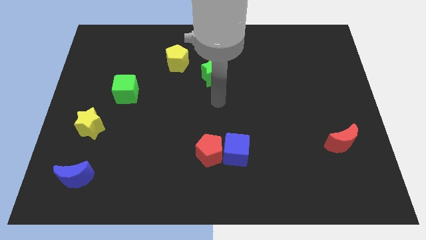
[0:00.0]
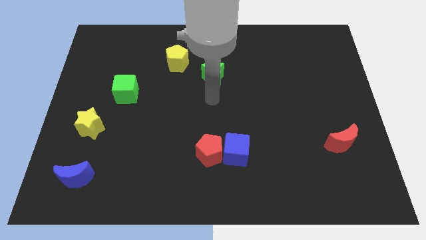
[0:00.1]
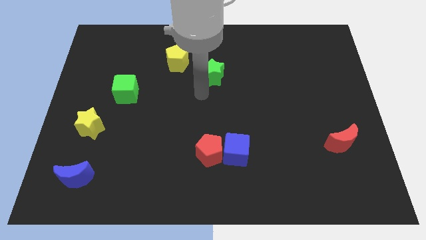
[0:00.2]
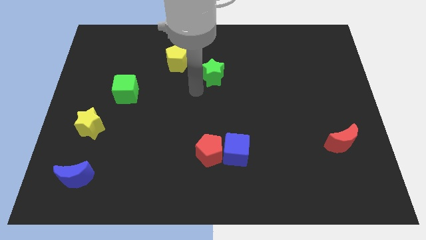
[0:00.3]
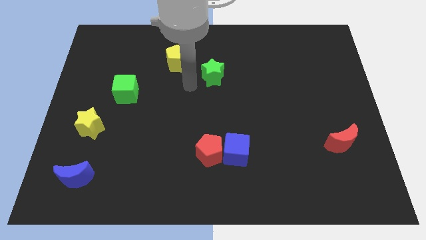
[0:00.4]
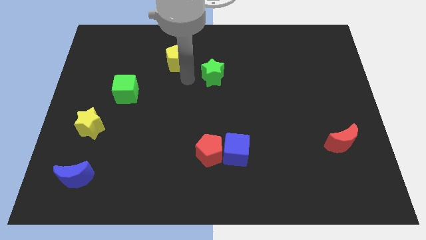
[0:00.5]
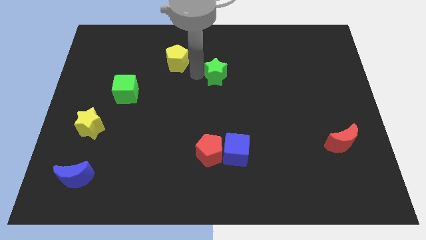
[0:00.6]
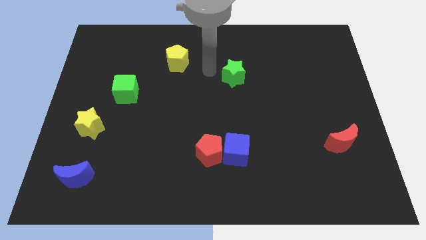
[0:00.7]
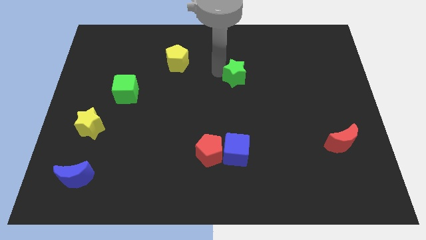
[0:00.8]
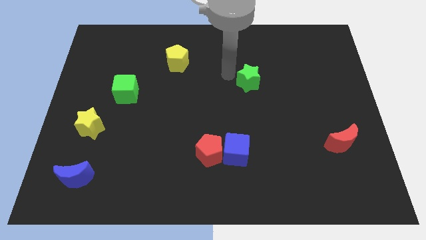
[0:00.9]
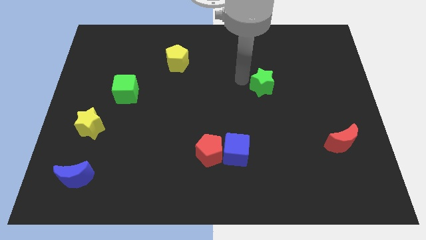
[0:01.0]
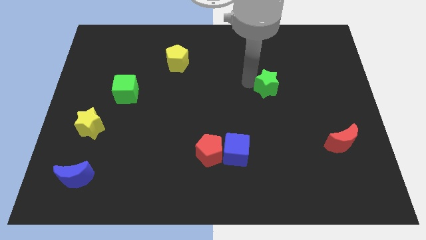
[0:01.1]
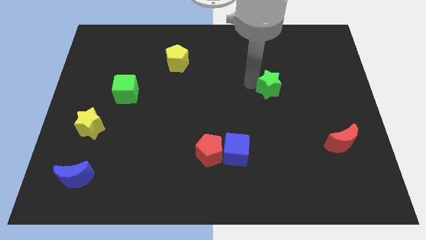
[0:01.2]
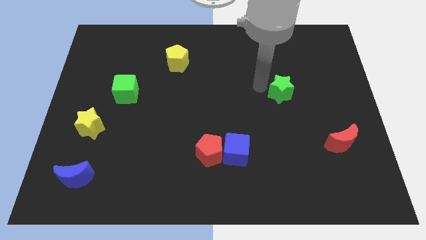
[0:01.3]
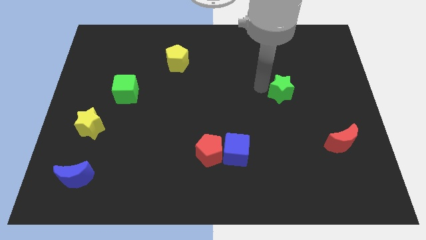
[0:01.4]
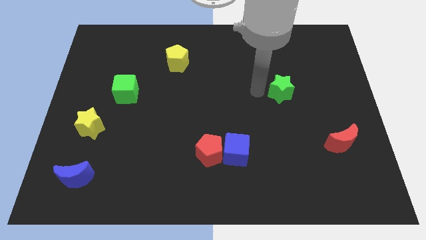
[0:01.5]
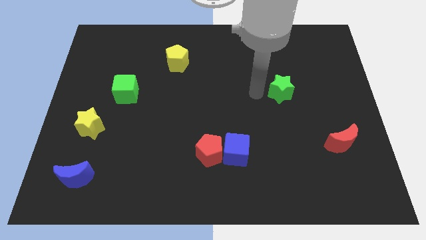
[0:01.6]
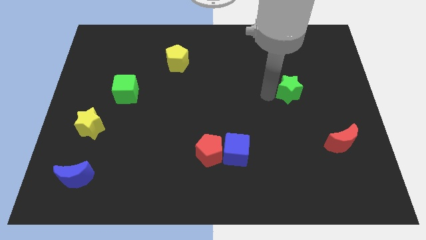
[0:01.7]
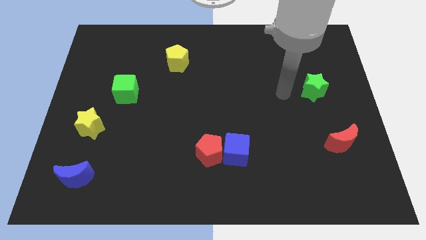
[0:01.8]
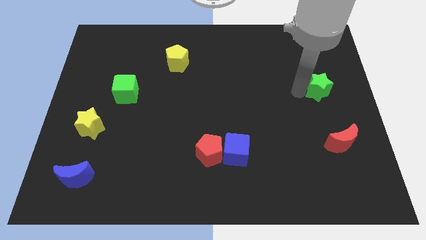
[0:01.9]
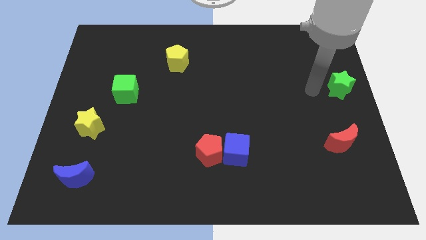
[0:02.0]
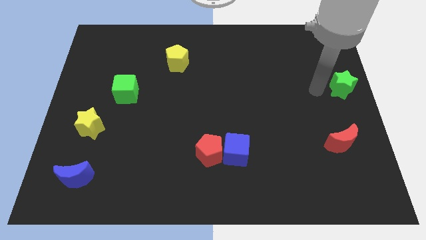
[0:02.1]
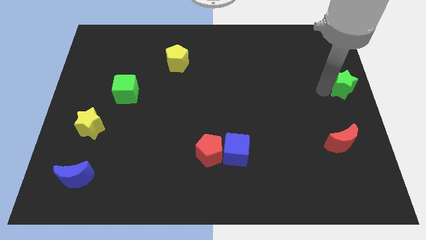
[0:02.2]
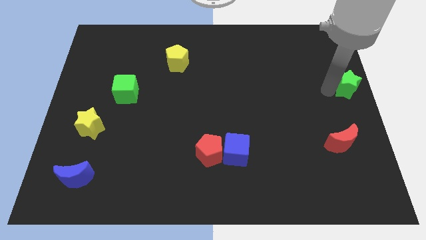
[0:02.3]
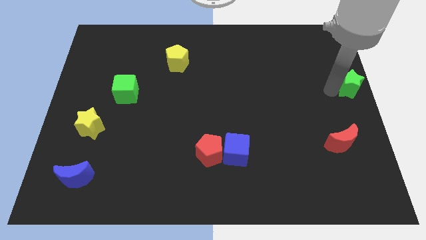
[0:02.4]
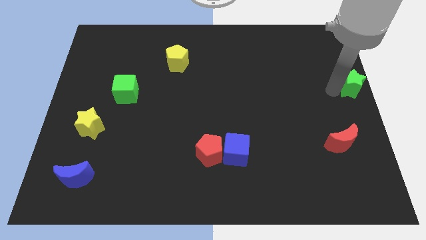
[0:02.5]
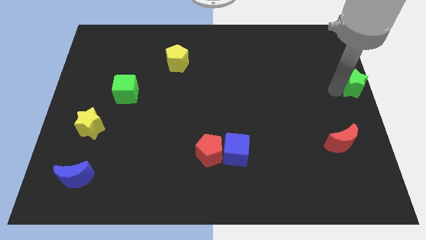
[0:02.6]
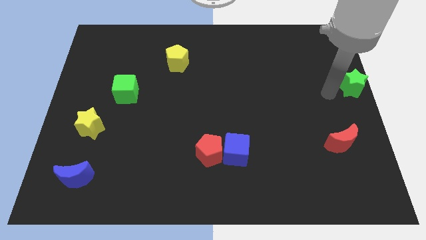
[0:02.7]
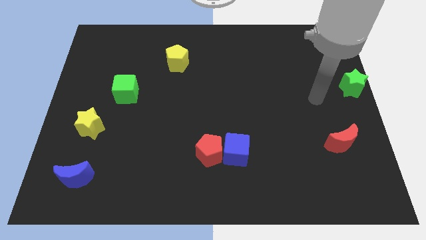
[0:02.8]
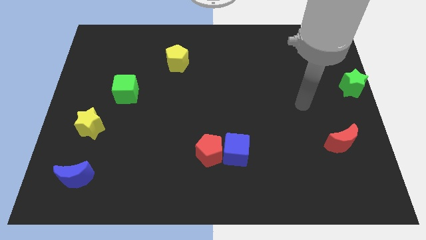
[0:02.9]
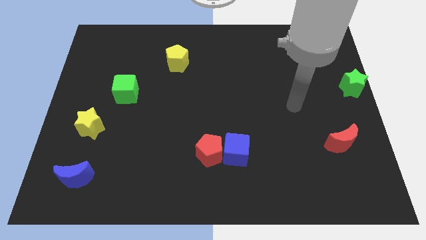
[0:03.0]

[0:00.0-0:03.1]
push the green star towards right middle center of the board

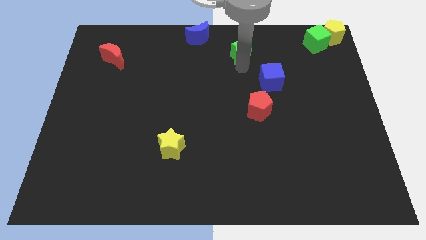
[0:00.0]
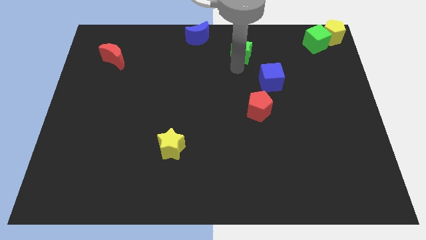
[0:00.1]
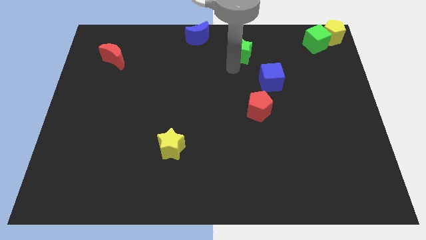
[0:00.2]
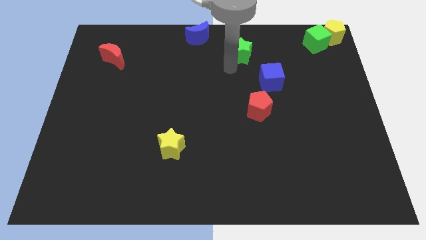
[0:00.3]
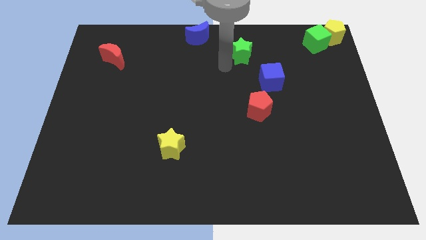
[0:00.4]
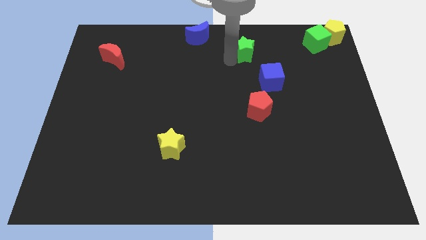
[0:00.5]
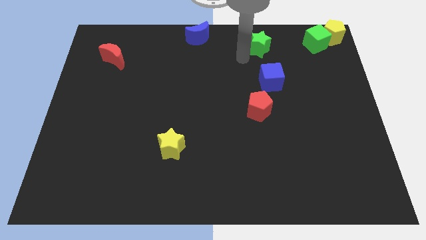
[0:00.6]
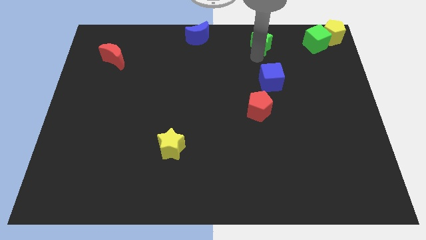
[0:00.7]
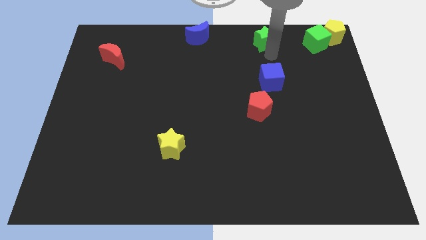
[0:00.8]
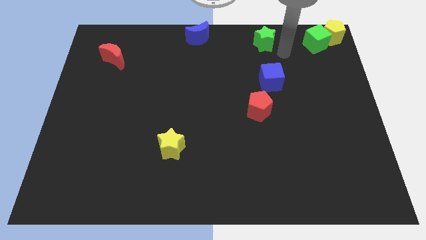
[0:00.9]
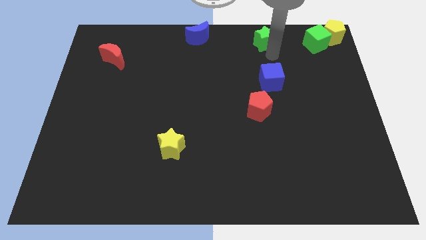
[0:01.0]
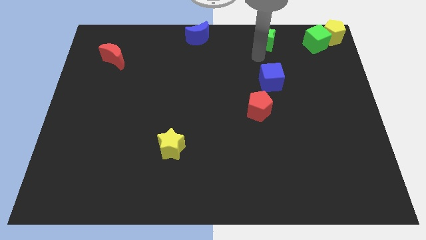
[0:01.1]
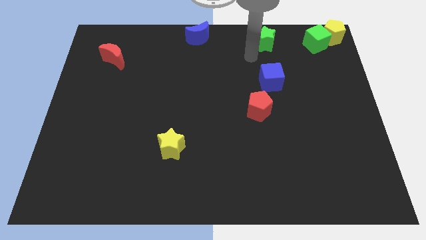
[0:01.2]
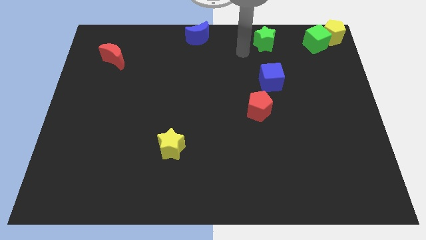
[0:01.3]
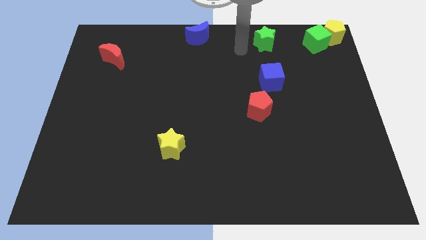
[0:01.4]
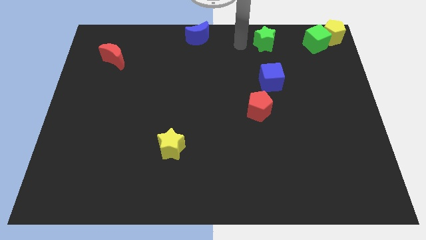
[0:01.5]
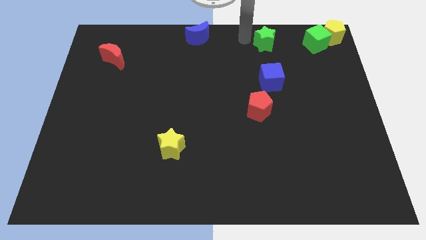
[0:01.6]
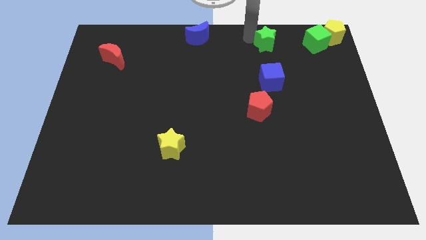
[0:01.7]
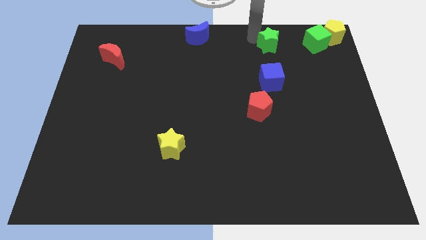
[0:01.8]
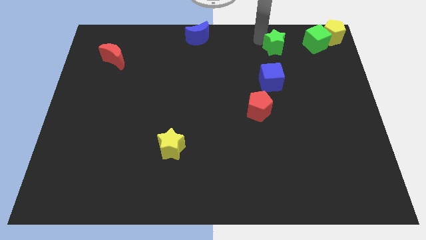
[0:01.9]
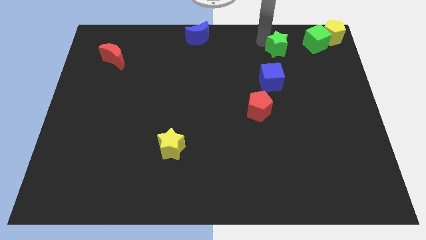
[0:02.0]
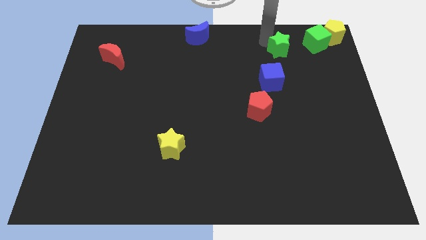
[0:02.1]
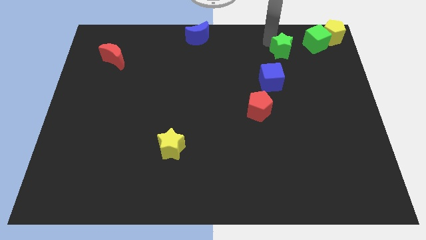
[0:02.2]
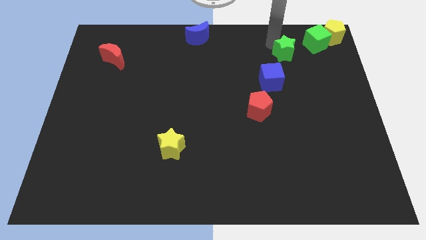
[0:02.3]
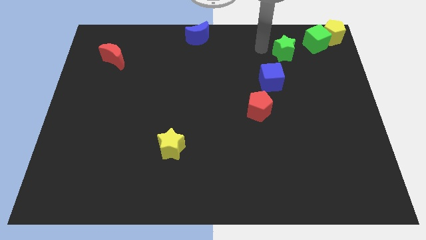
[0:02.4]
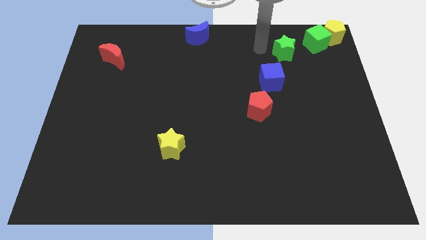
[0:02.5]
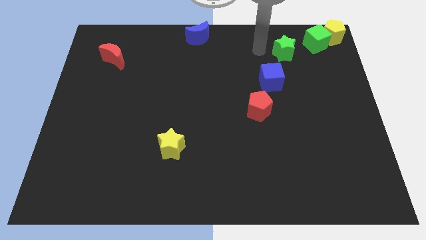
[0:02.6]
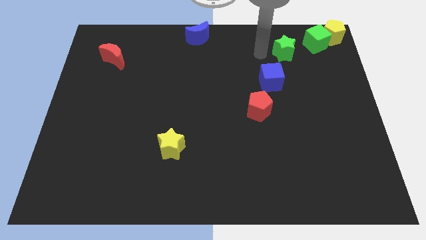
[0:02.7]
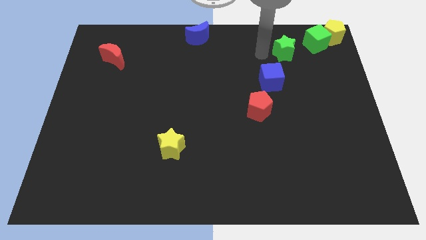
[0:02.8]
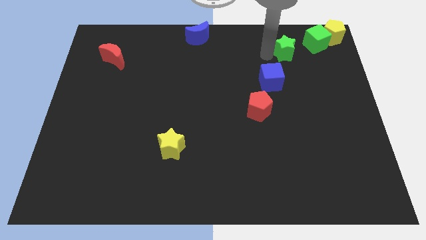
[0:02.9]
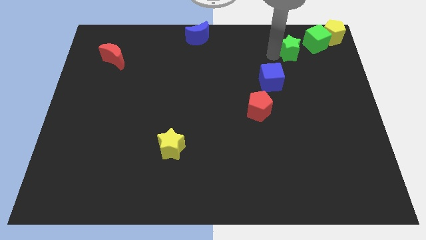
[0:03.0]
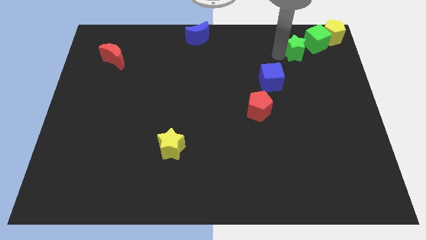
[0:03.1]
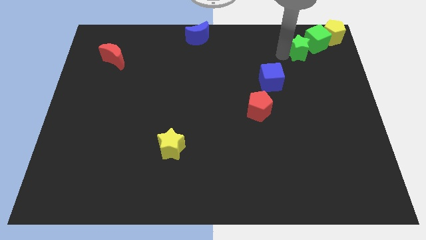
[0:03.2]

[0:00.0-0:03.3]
slide the green star close to the green cube

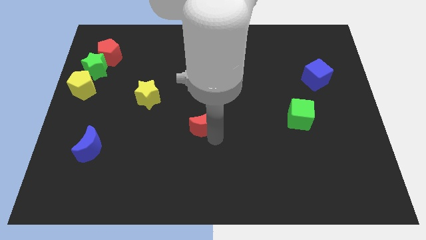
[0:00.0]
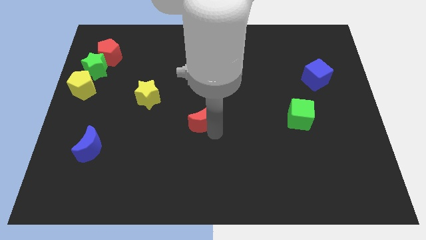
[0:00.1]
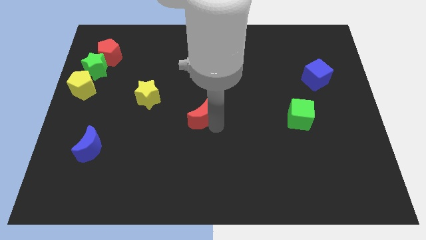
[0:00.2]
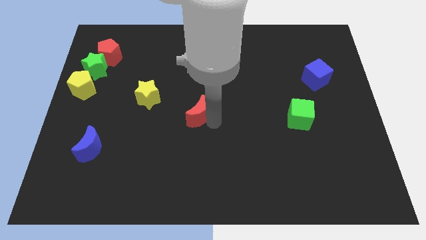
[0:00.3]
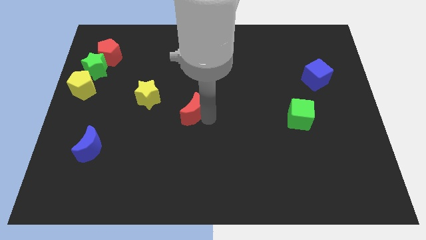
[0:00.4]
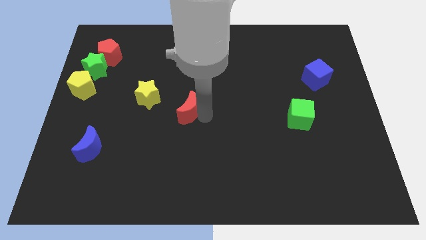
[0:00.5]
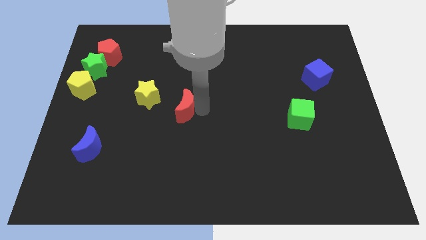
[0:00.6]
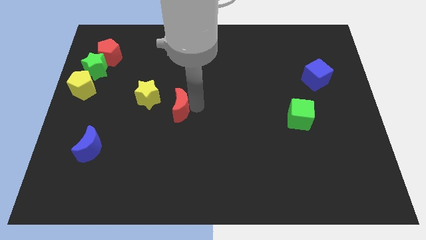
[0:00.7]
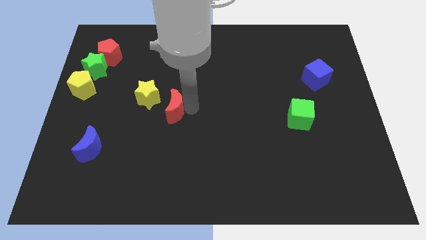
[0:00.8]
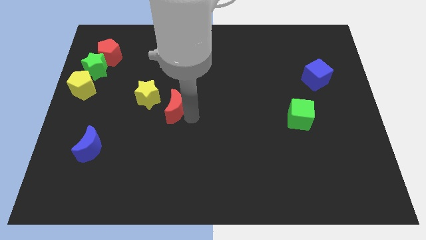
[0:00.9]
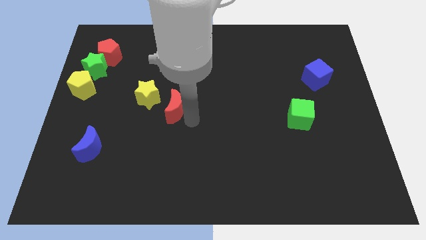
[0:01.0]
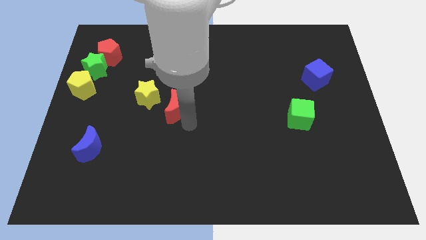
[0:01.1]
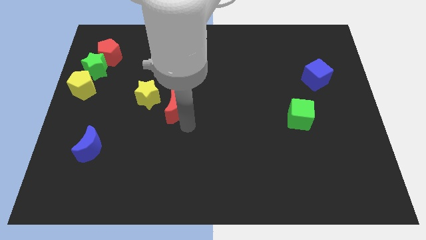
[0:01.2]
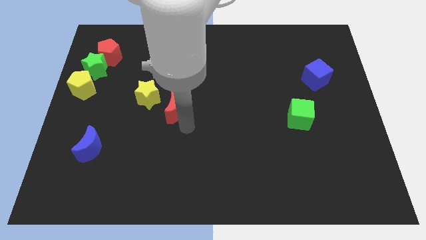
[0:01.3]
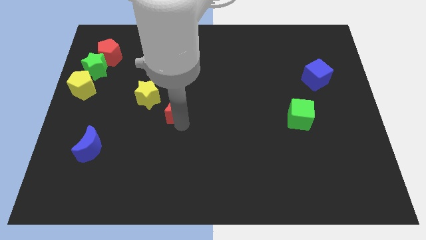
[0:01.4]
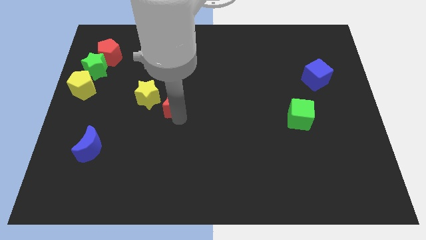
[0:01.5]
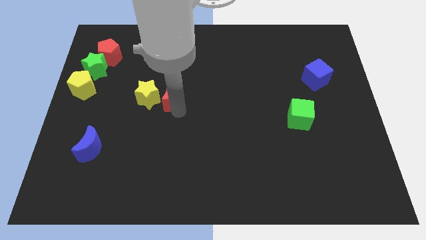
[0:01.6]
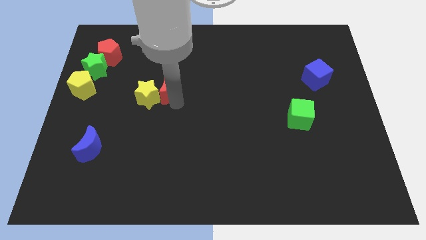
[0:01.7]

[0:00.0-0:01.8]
bring the red crescent at the right side of the yellow star

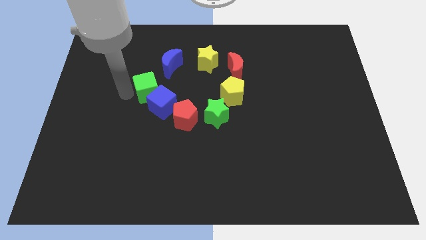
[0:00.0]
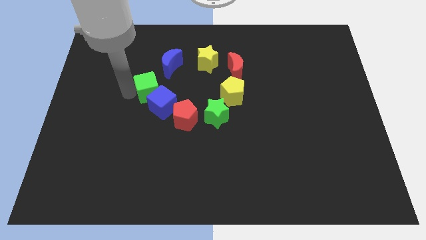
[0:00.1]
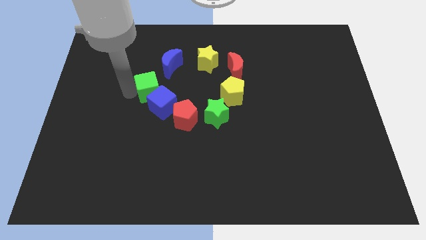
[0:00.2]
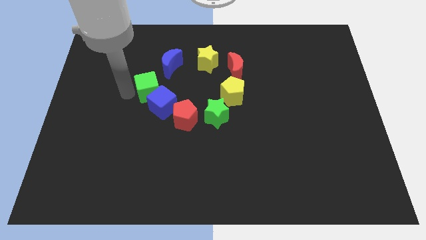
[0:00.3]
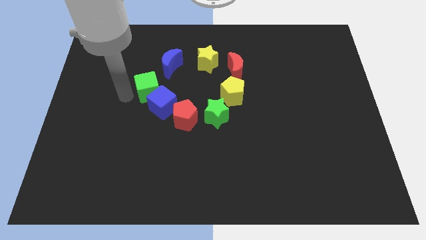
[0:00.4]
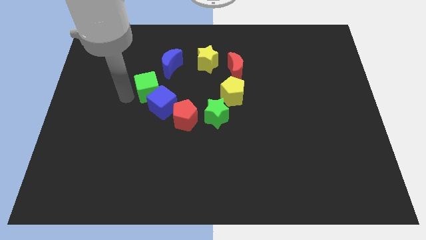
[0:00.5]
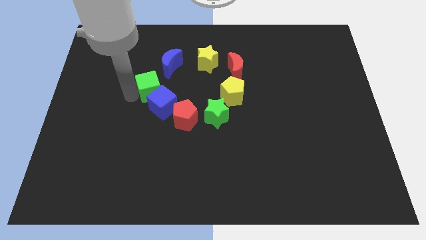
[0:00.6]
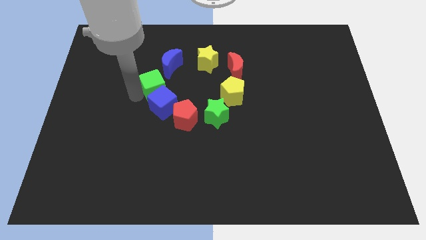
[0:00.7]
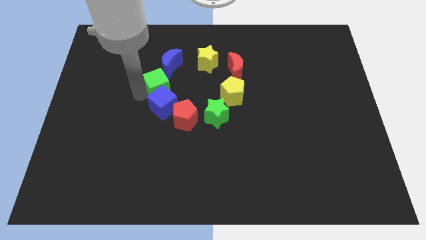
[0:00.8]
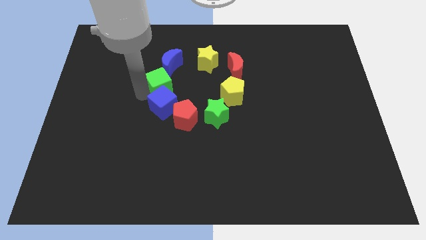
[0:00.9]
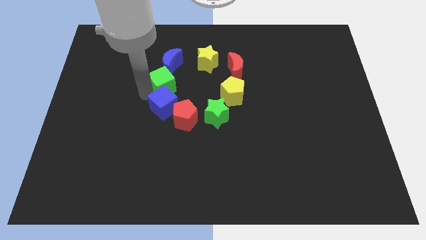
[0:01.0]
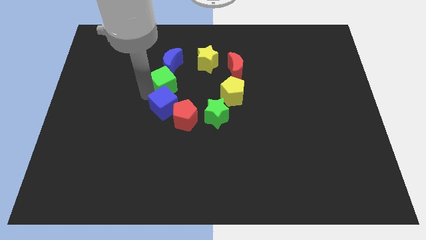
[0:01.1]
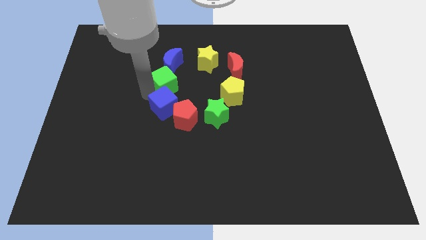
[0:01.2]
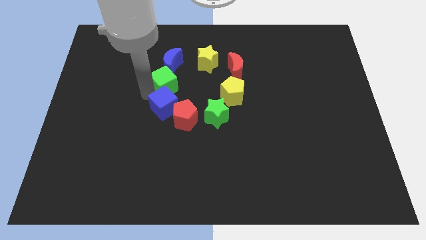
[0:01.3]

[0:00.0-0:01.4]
place the green cube above the blue cube
